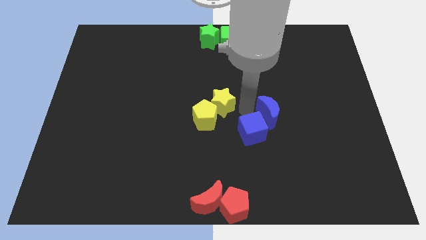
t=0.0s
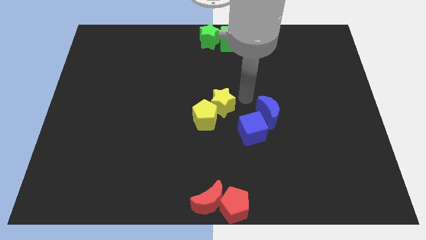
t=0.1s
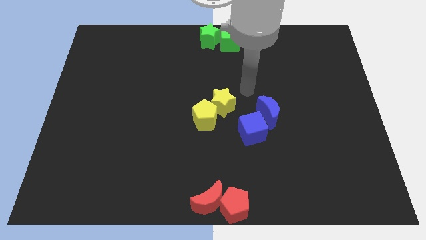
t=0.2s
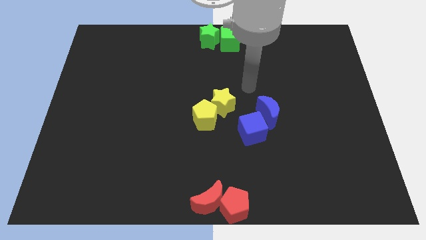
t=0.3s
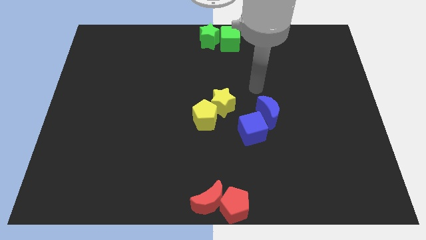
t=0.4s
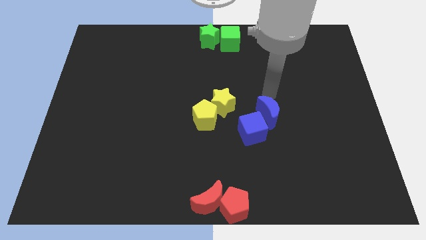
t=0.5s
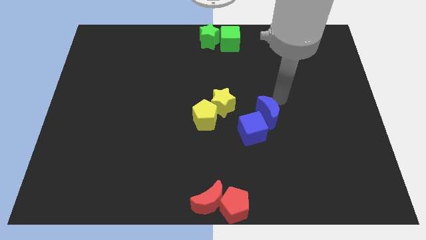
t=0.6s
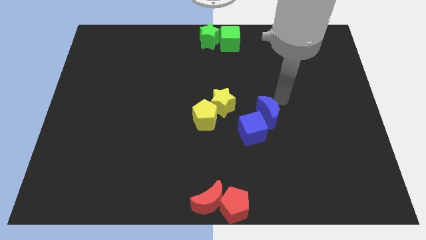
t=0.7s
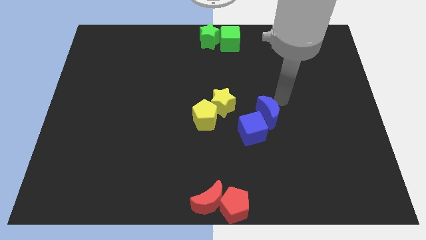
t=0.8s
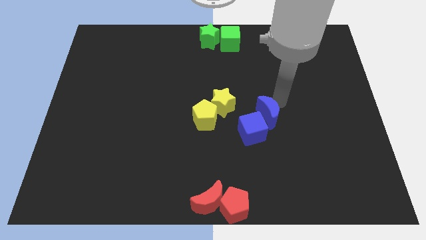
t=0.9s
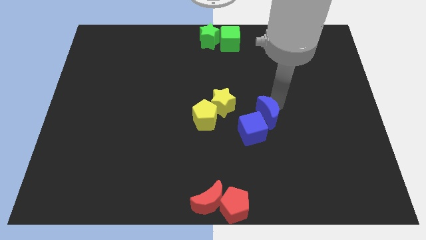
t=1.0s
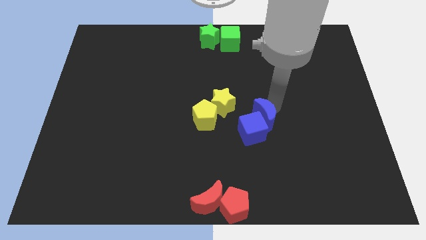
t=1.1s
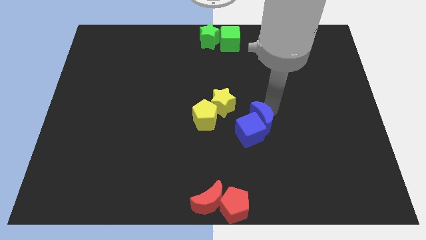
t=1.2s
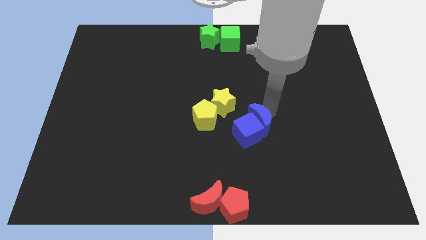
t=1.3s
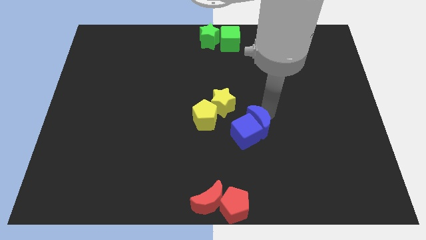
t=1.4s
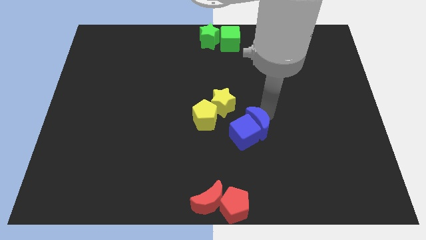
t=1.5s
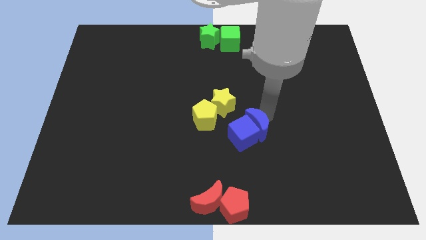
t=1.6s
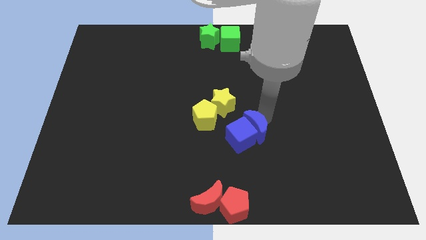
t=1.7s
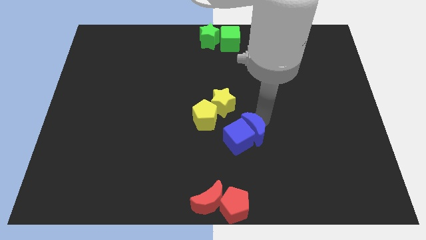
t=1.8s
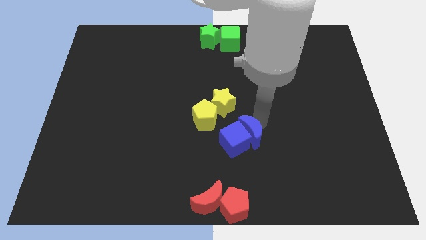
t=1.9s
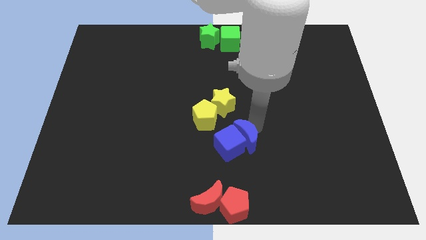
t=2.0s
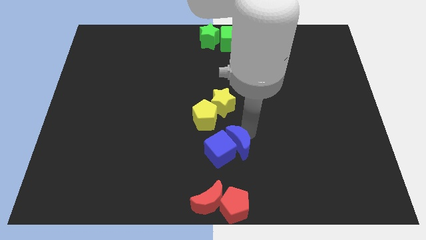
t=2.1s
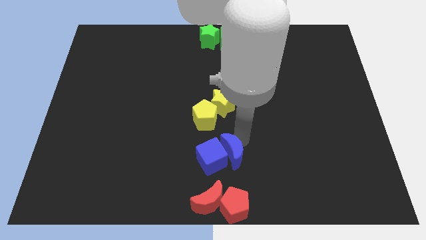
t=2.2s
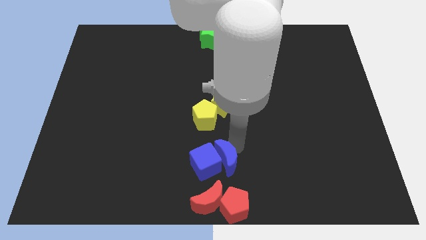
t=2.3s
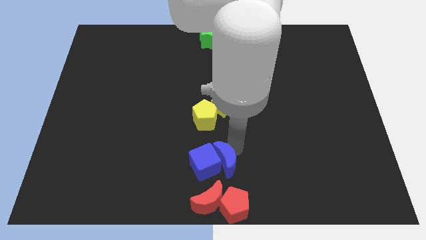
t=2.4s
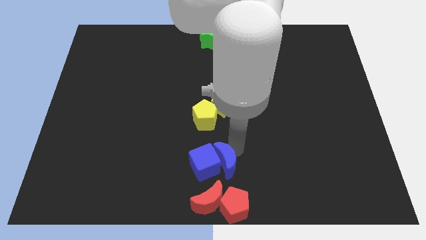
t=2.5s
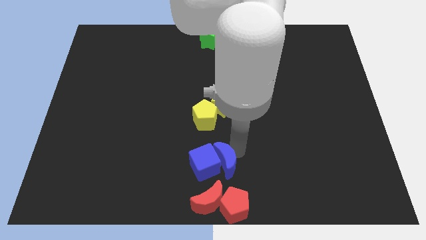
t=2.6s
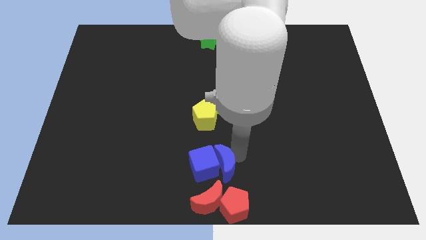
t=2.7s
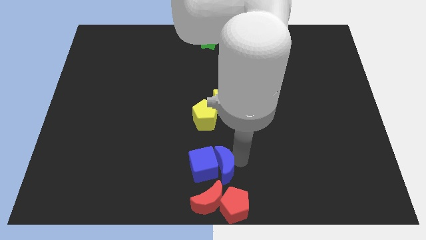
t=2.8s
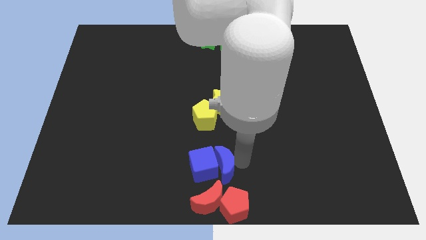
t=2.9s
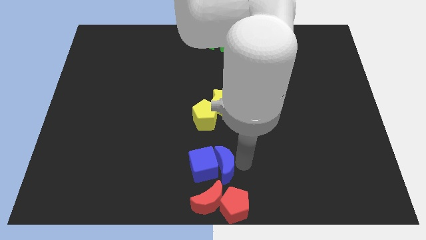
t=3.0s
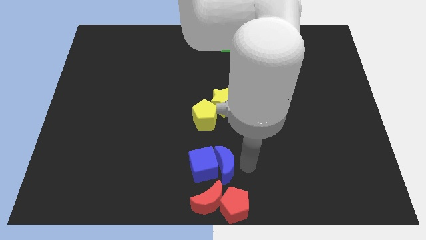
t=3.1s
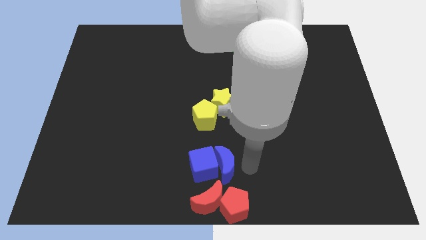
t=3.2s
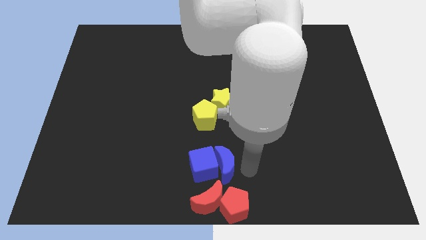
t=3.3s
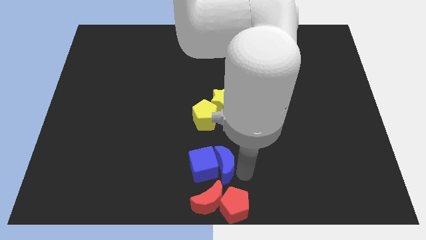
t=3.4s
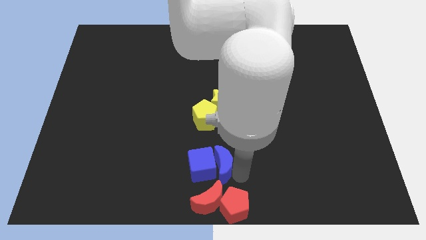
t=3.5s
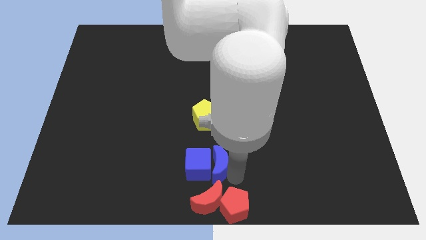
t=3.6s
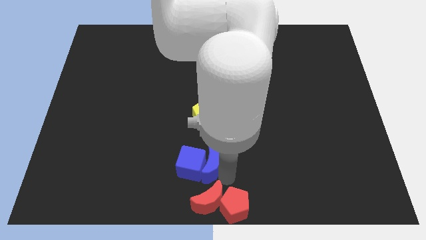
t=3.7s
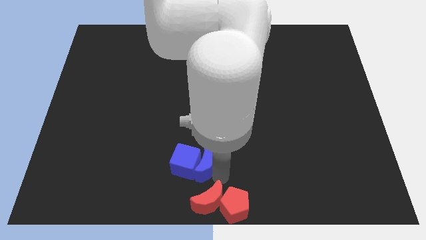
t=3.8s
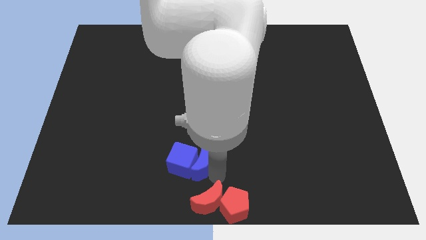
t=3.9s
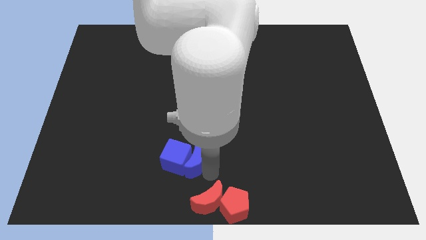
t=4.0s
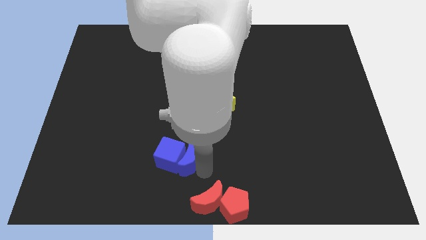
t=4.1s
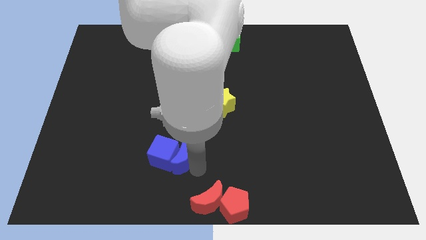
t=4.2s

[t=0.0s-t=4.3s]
push the blue blocks towards the left side of the board

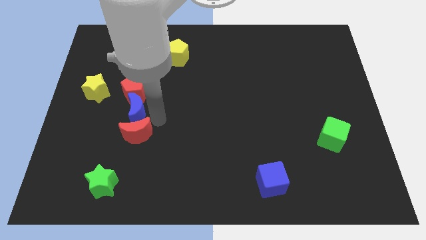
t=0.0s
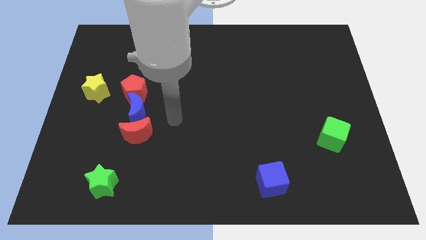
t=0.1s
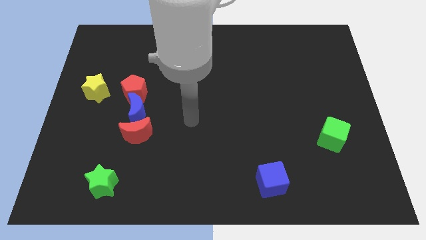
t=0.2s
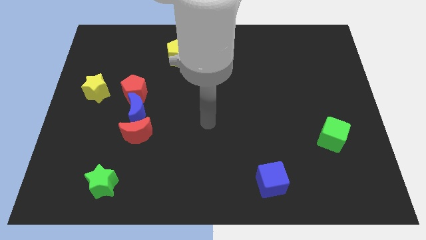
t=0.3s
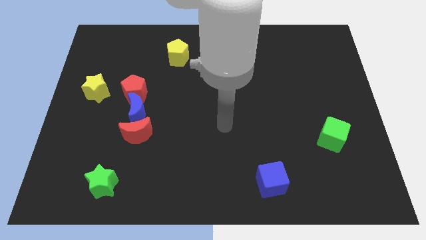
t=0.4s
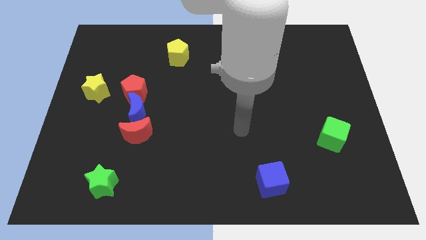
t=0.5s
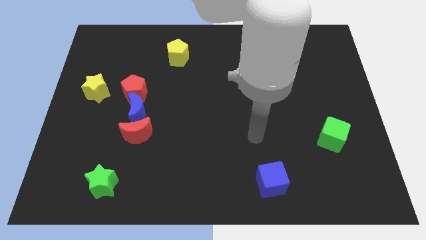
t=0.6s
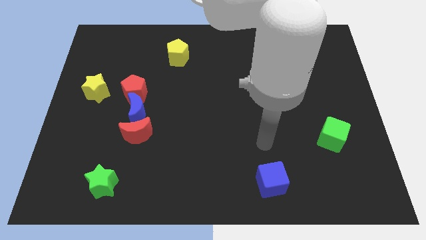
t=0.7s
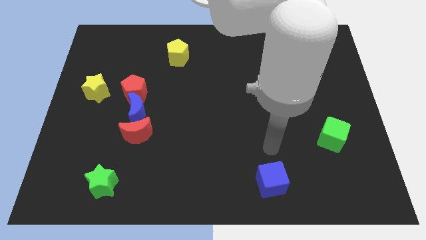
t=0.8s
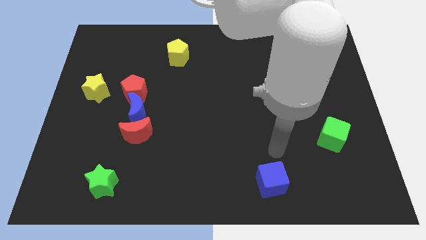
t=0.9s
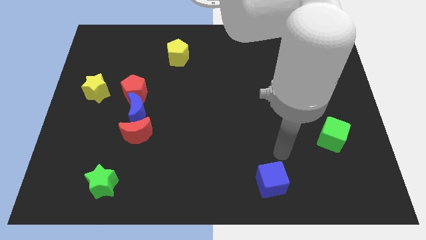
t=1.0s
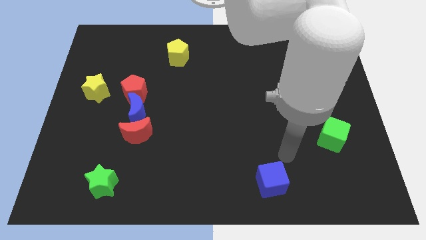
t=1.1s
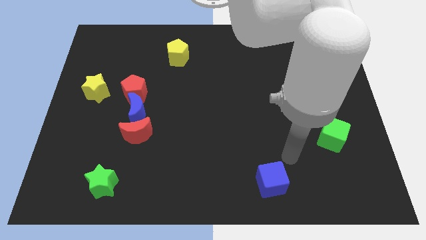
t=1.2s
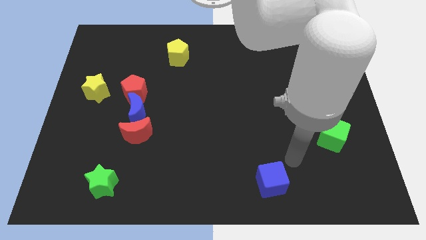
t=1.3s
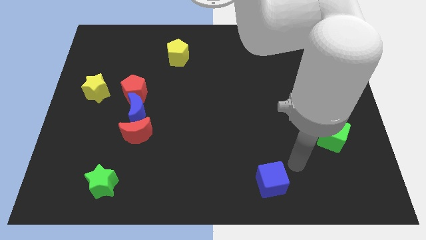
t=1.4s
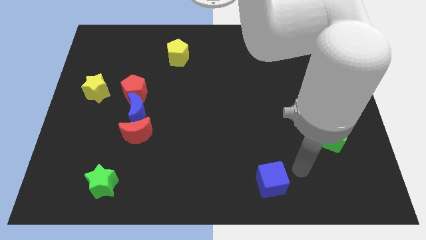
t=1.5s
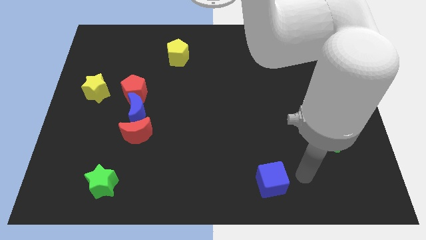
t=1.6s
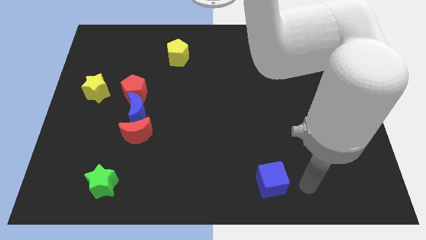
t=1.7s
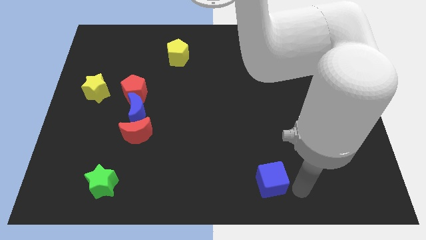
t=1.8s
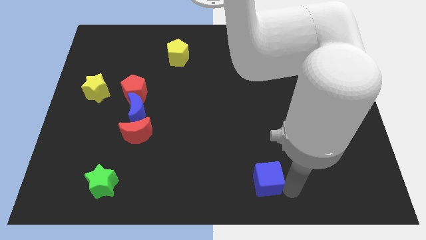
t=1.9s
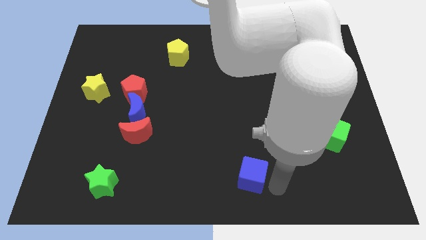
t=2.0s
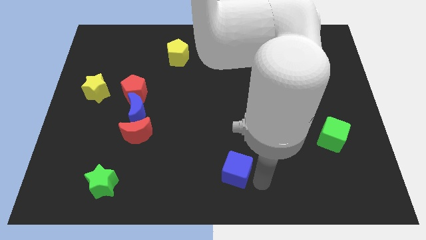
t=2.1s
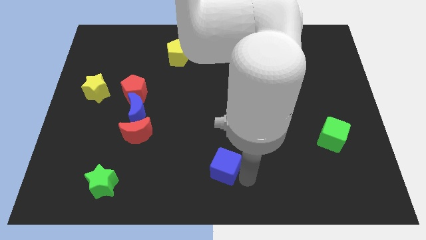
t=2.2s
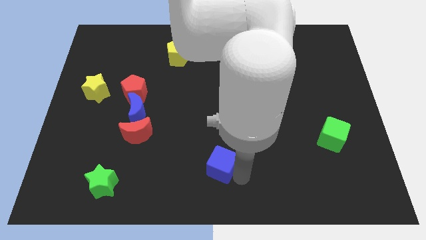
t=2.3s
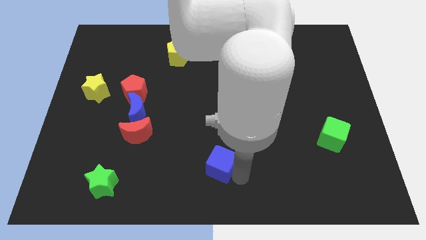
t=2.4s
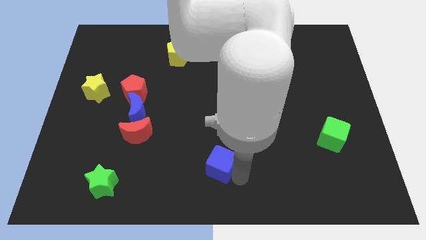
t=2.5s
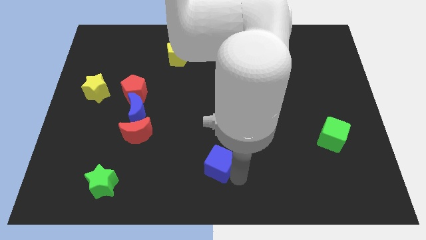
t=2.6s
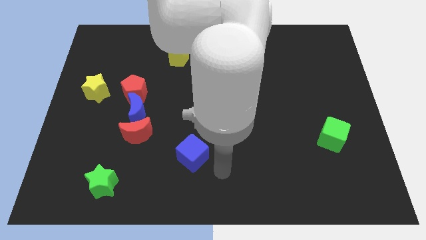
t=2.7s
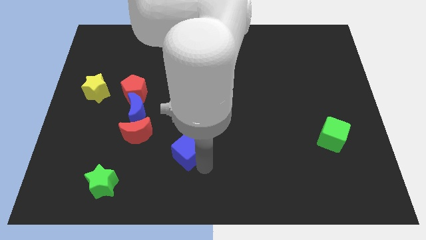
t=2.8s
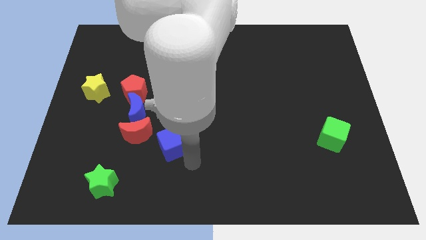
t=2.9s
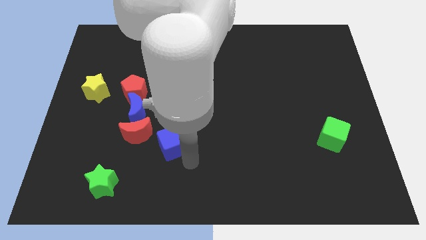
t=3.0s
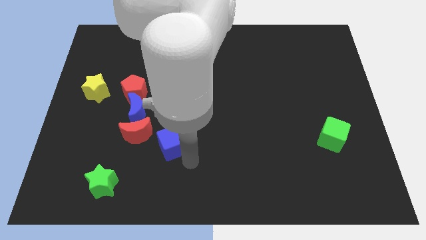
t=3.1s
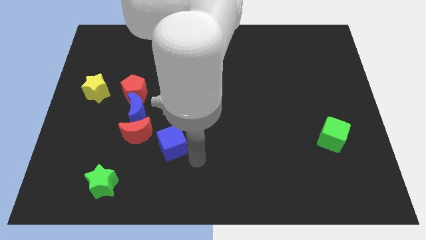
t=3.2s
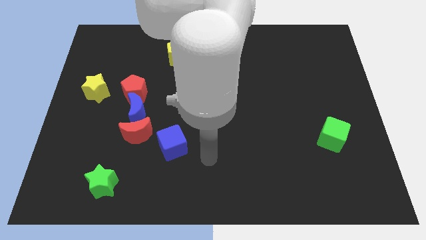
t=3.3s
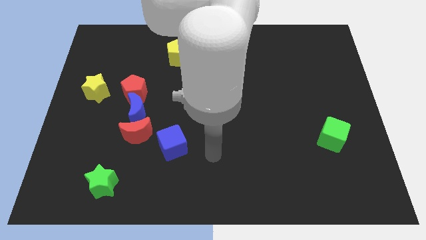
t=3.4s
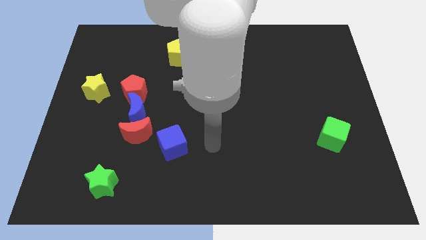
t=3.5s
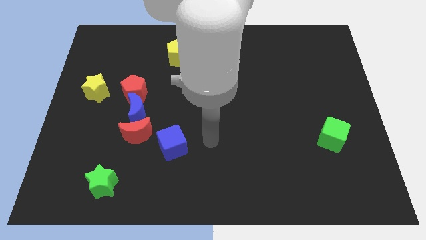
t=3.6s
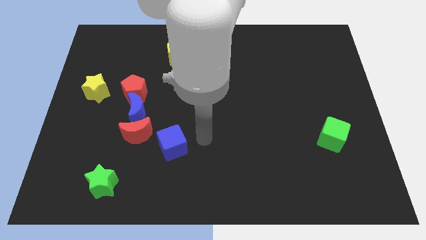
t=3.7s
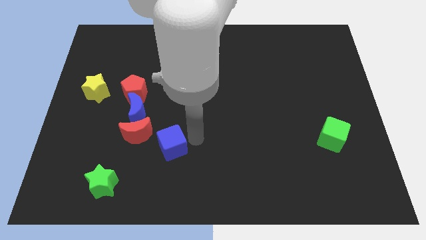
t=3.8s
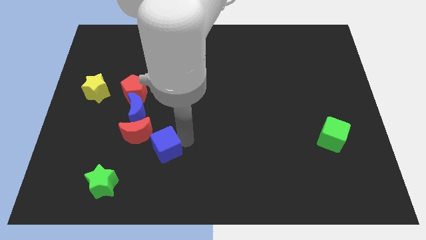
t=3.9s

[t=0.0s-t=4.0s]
place the blue cube close to the red crescent

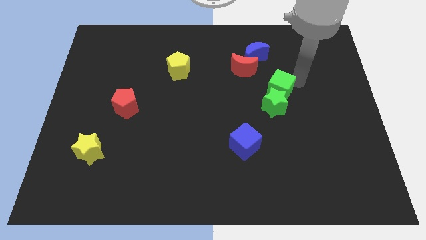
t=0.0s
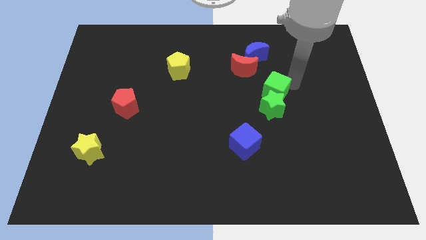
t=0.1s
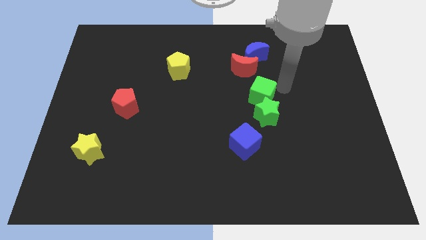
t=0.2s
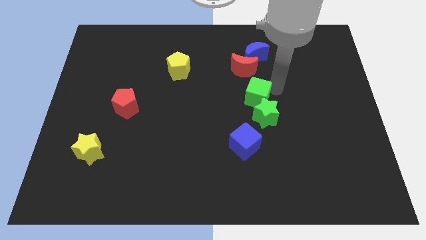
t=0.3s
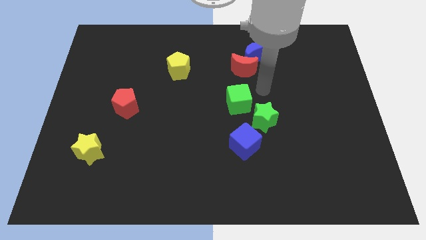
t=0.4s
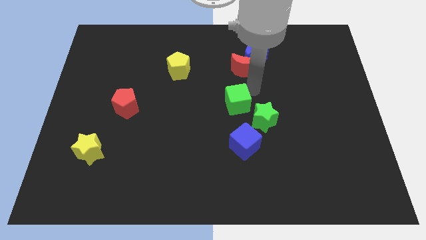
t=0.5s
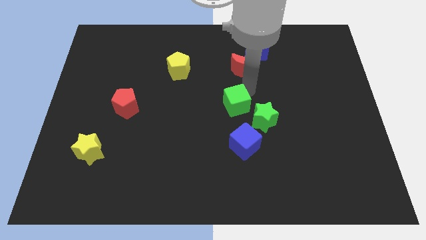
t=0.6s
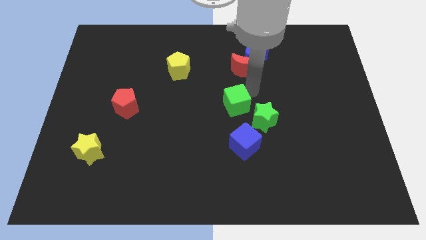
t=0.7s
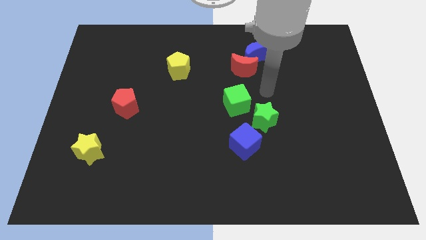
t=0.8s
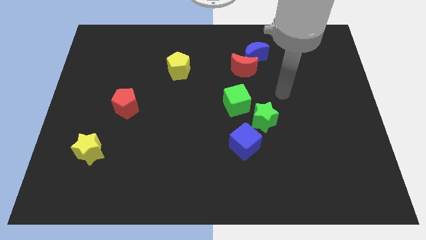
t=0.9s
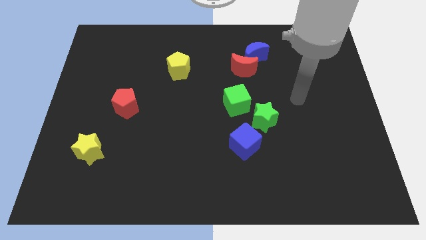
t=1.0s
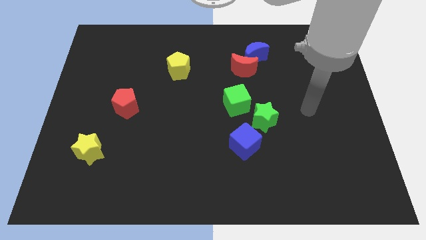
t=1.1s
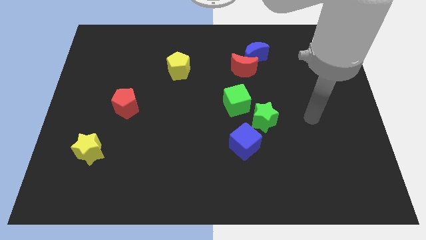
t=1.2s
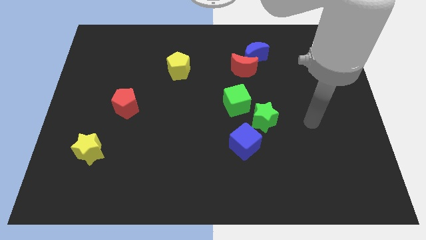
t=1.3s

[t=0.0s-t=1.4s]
separate the green star and green cube
